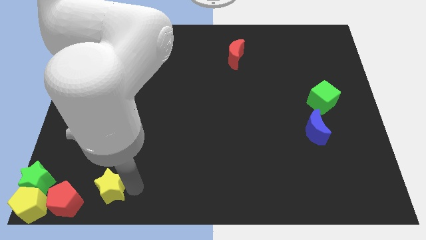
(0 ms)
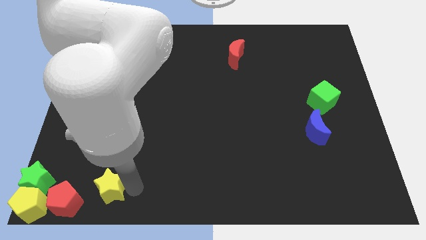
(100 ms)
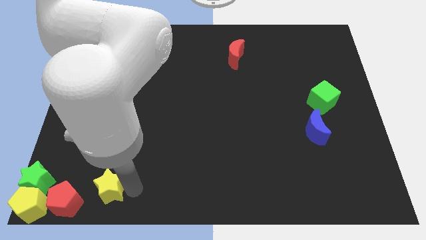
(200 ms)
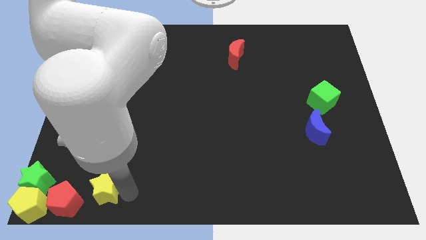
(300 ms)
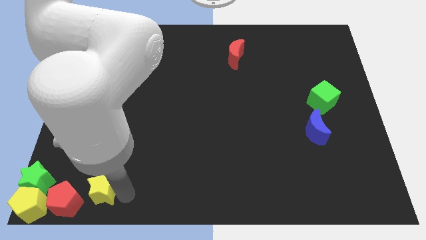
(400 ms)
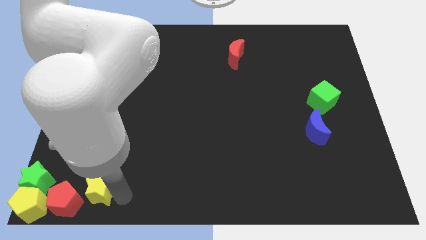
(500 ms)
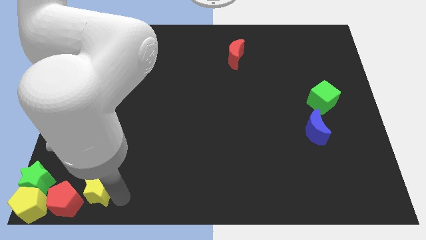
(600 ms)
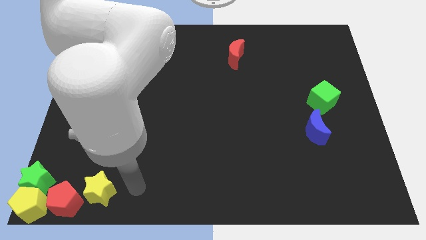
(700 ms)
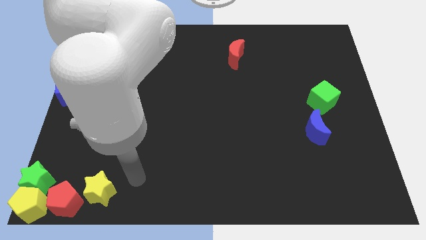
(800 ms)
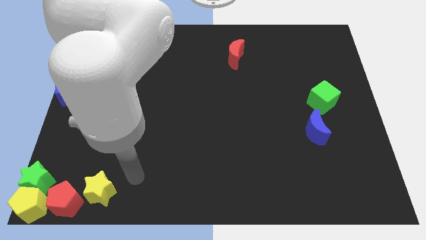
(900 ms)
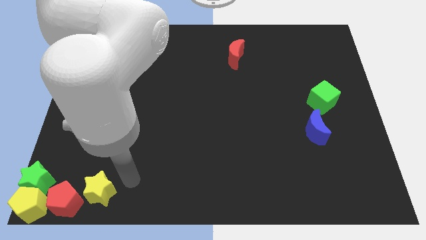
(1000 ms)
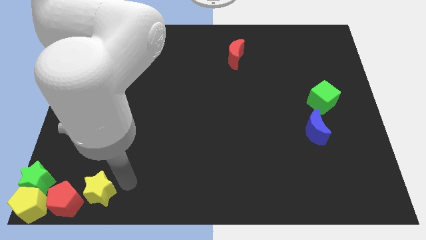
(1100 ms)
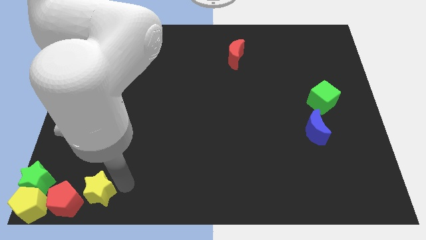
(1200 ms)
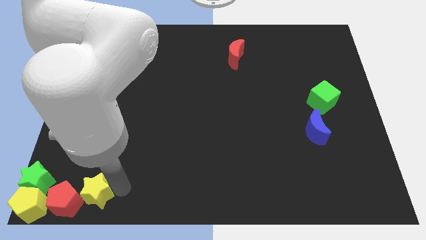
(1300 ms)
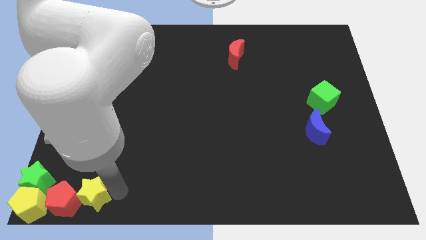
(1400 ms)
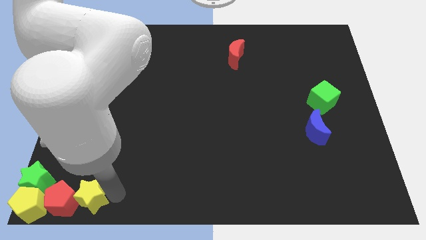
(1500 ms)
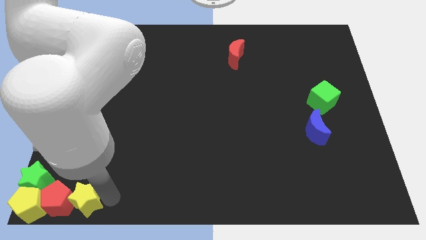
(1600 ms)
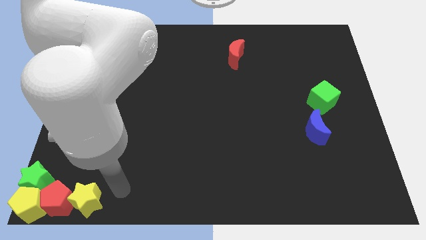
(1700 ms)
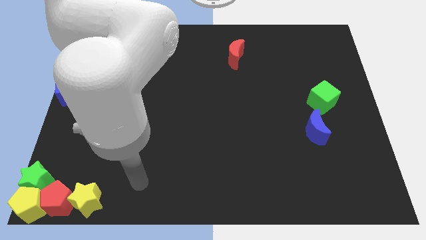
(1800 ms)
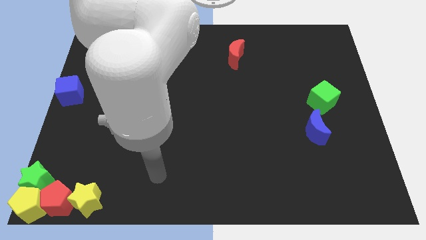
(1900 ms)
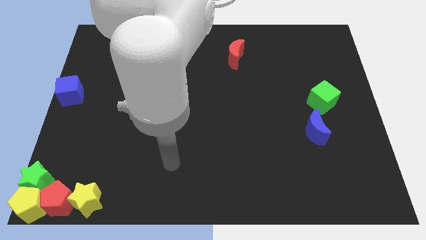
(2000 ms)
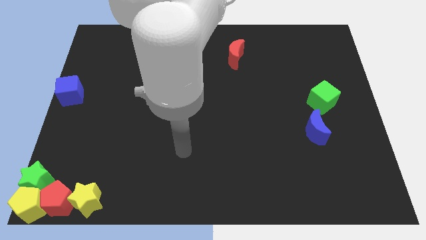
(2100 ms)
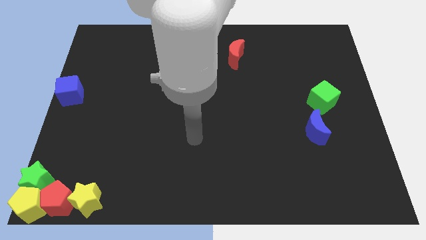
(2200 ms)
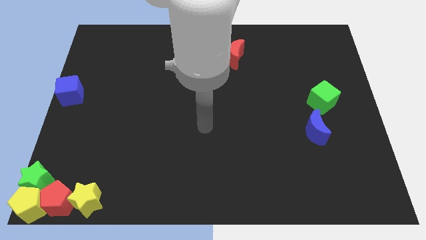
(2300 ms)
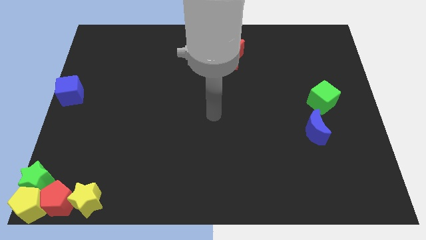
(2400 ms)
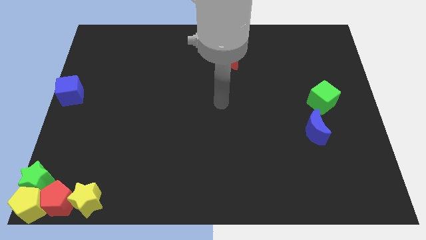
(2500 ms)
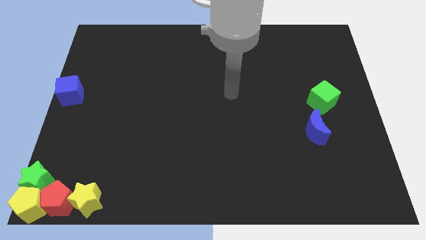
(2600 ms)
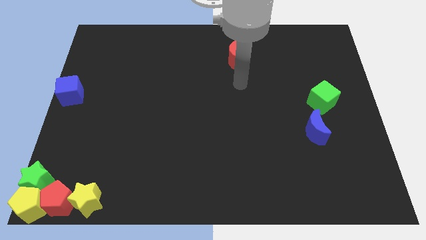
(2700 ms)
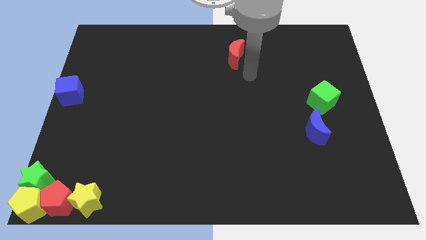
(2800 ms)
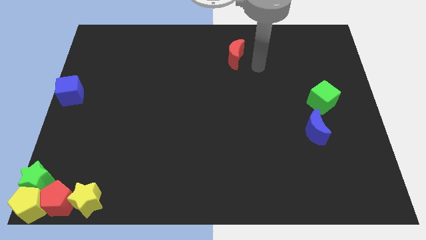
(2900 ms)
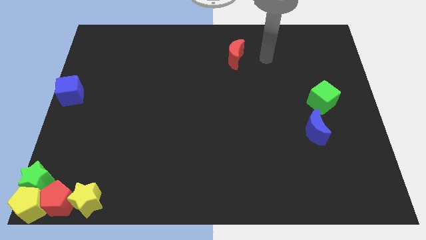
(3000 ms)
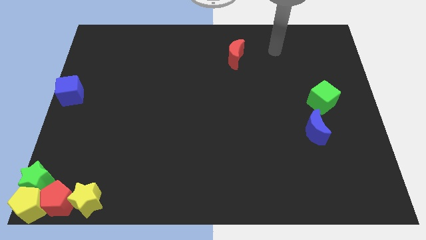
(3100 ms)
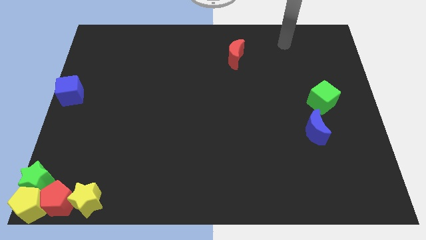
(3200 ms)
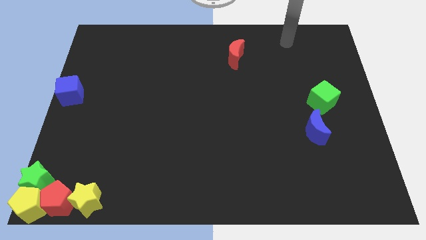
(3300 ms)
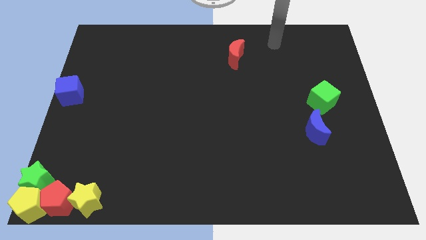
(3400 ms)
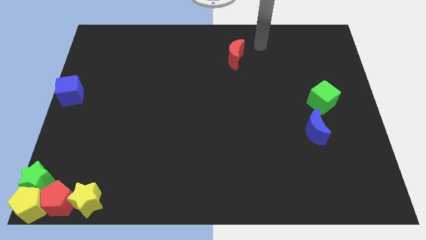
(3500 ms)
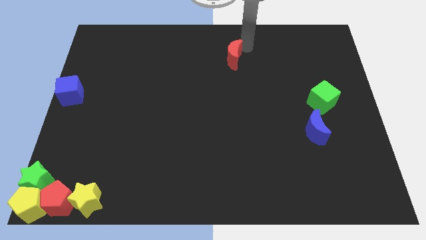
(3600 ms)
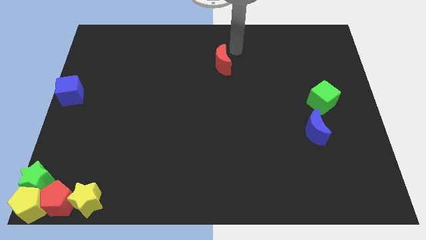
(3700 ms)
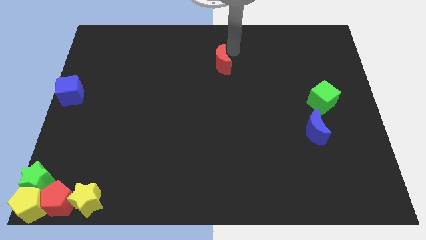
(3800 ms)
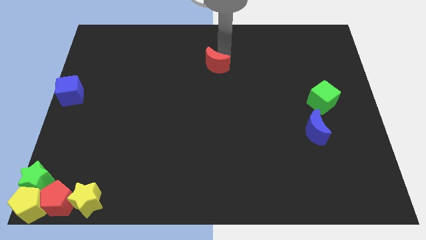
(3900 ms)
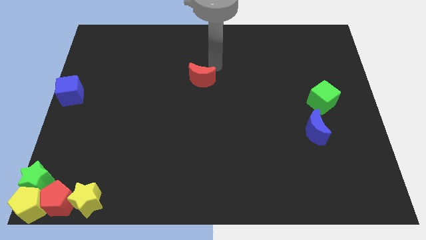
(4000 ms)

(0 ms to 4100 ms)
place the yellow star right to the red pentagon to form a horizontal line

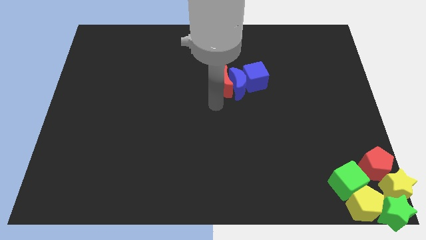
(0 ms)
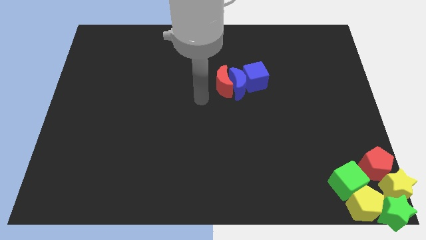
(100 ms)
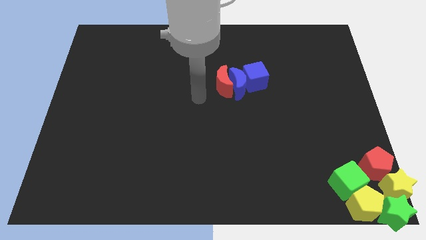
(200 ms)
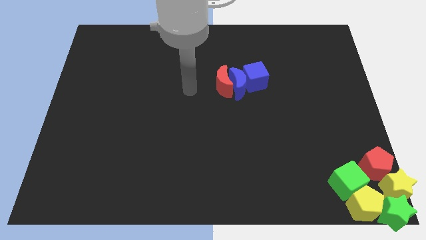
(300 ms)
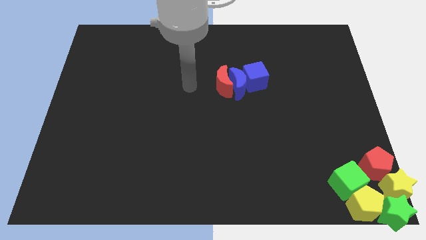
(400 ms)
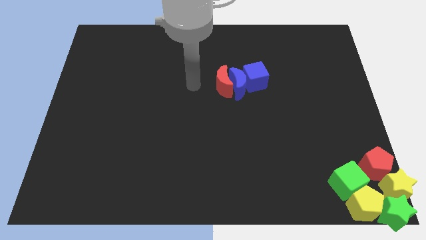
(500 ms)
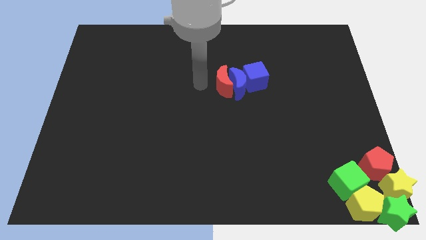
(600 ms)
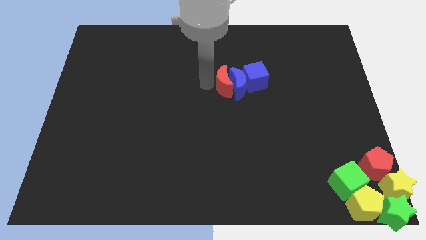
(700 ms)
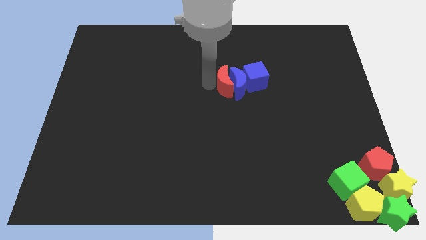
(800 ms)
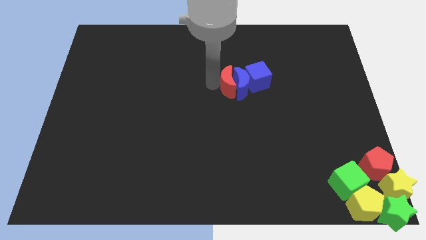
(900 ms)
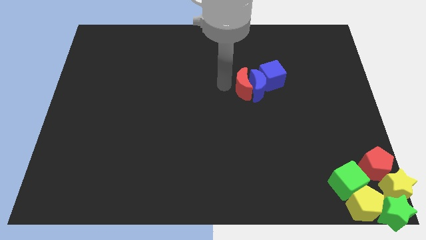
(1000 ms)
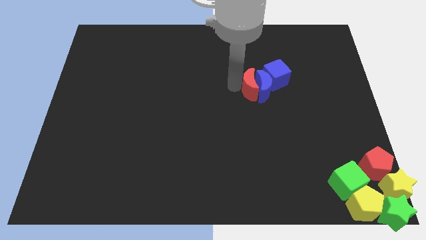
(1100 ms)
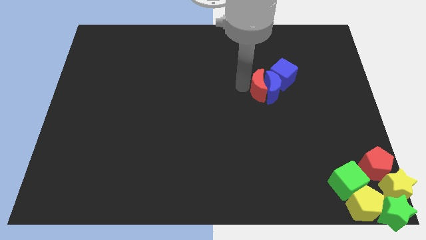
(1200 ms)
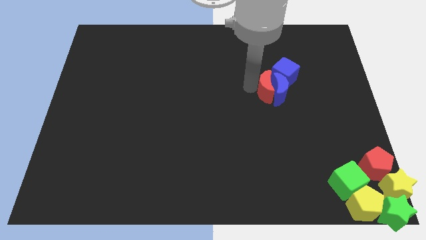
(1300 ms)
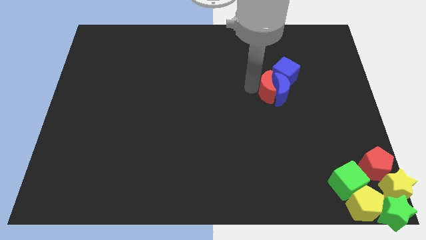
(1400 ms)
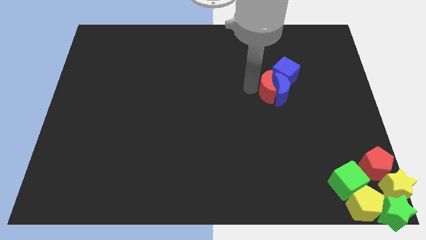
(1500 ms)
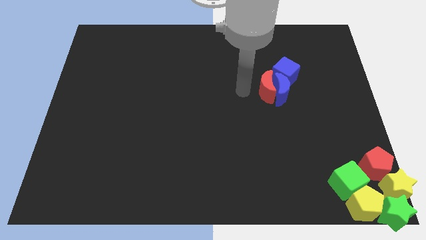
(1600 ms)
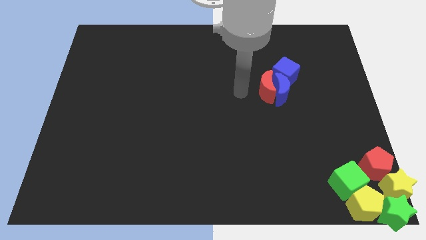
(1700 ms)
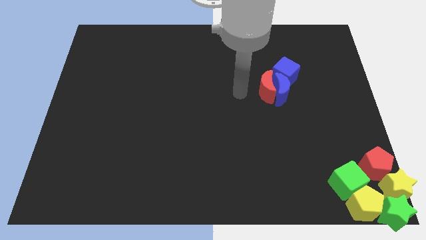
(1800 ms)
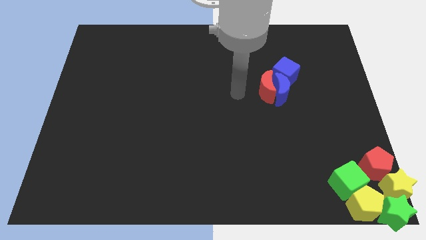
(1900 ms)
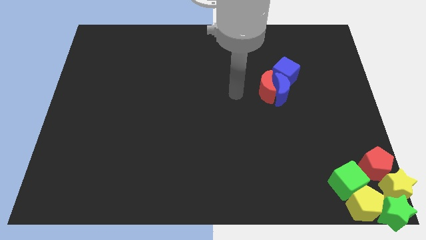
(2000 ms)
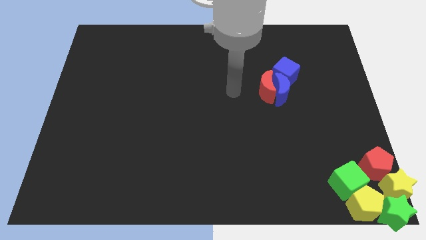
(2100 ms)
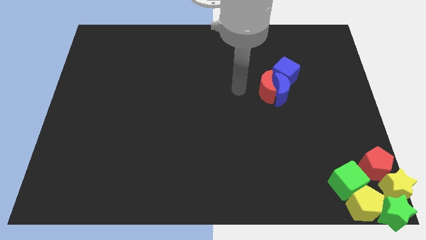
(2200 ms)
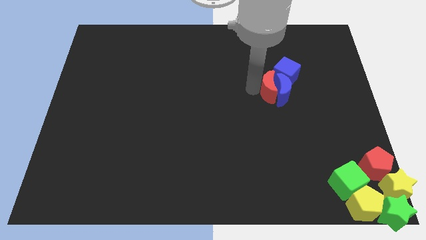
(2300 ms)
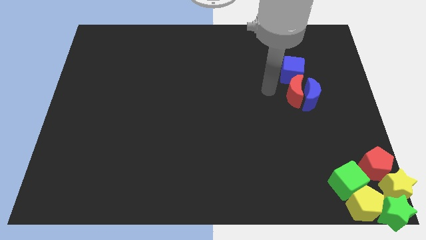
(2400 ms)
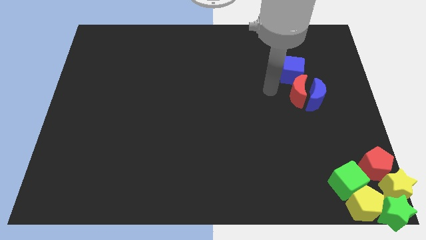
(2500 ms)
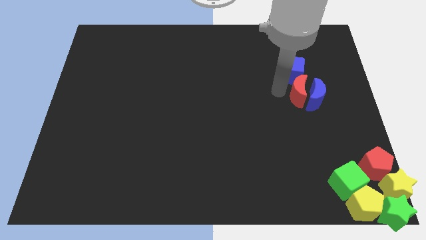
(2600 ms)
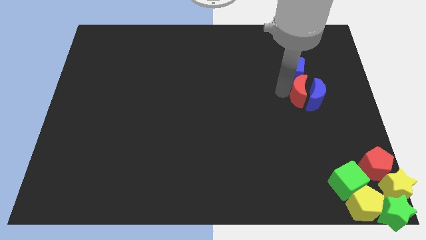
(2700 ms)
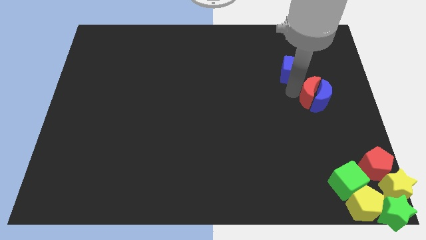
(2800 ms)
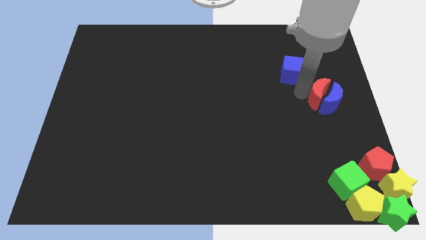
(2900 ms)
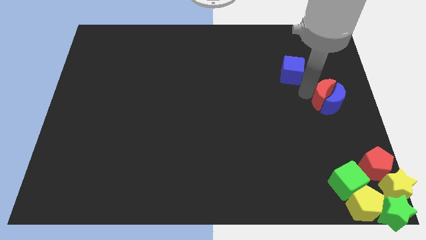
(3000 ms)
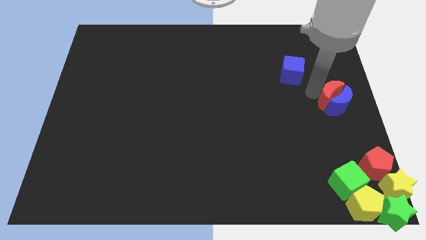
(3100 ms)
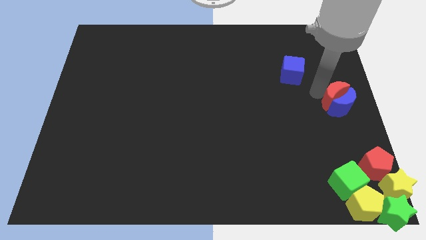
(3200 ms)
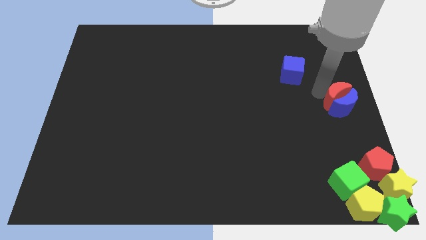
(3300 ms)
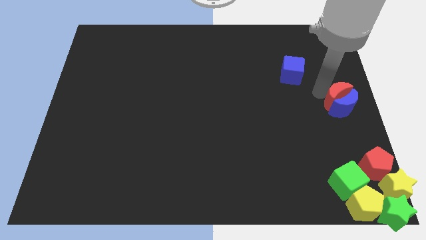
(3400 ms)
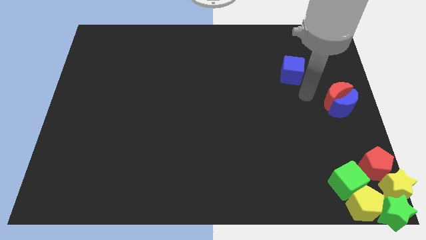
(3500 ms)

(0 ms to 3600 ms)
move the red and blue moon to the center right of the board

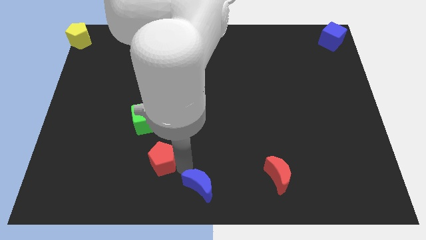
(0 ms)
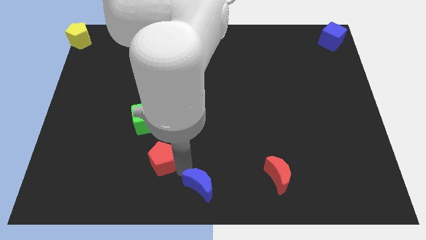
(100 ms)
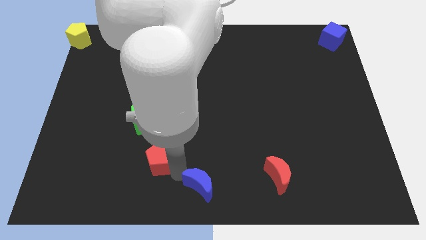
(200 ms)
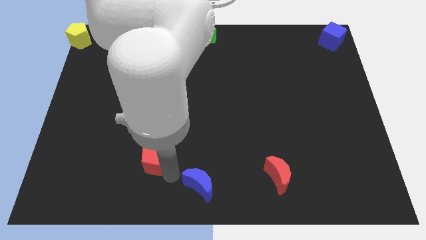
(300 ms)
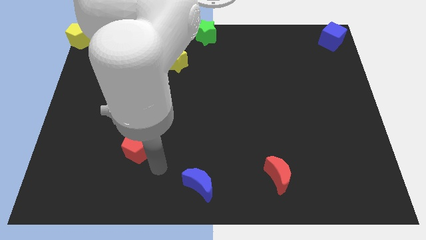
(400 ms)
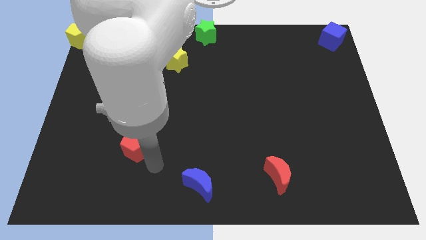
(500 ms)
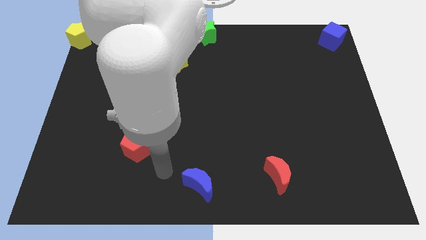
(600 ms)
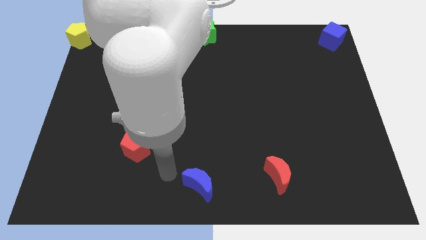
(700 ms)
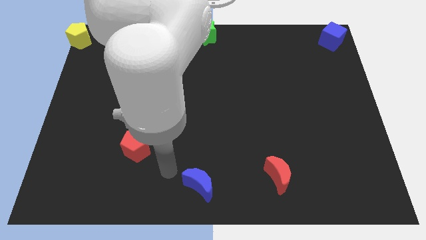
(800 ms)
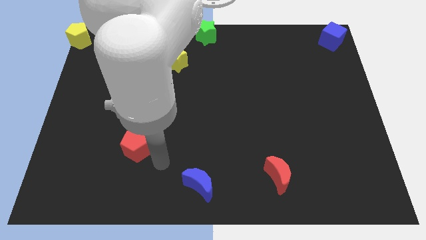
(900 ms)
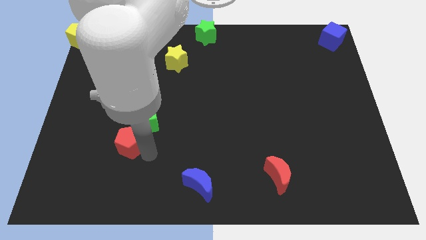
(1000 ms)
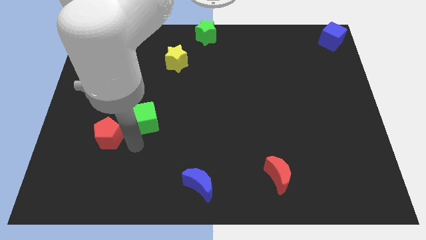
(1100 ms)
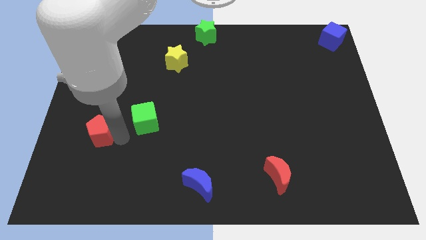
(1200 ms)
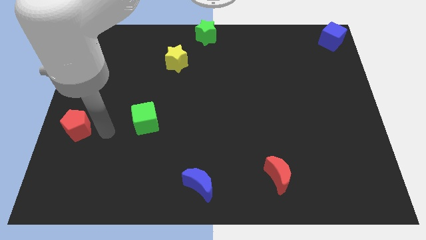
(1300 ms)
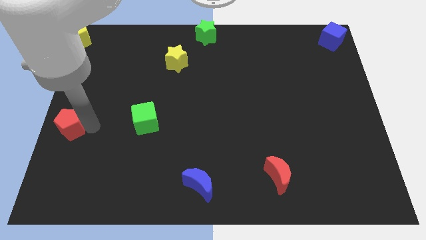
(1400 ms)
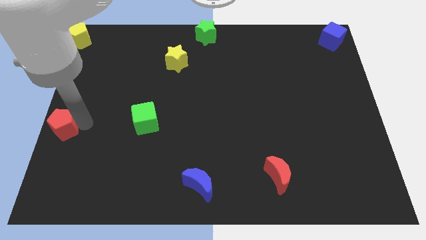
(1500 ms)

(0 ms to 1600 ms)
move the red pentagon away from the blue crescent
